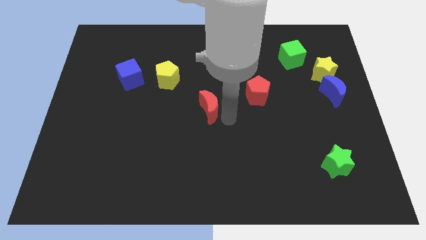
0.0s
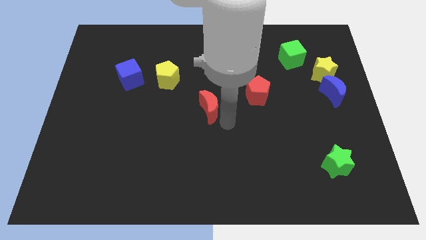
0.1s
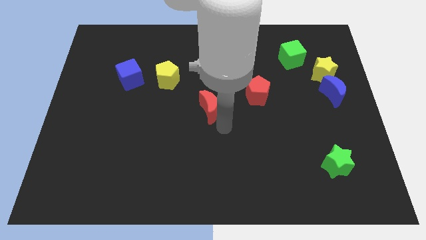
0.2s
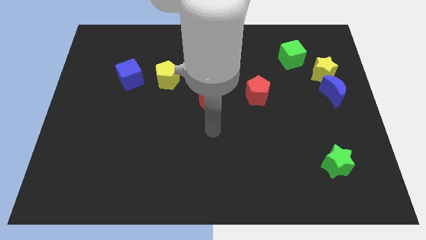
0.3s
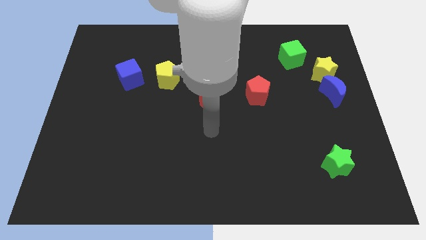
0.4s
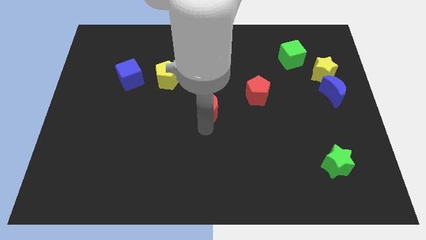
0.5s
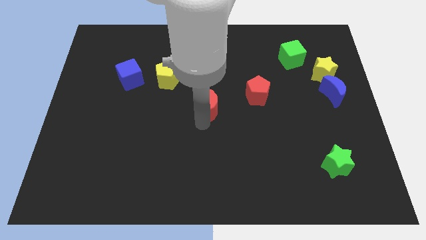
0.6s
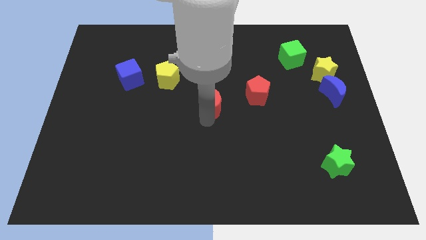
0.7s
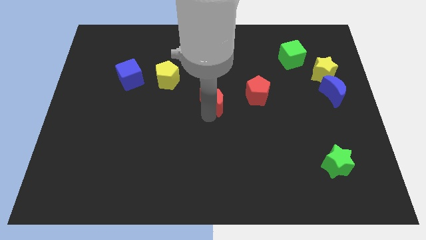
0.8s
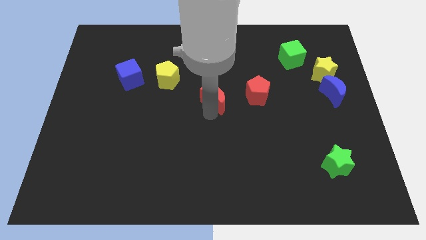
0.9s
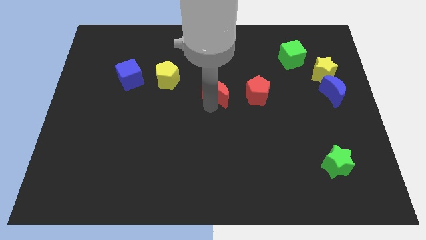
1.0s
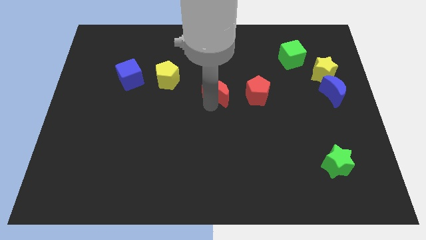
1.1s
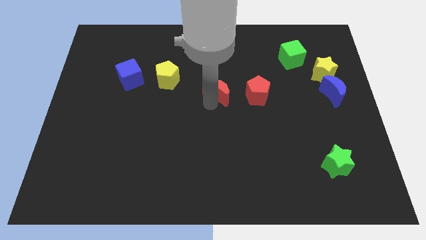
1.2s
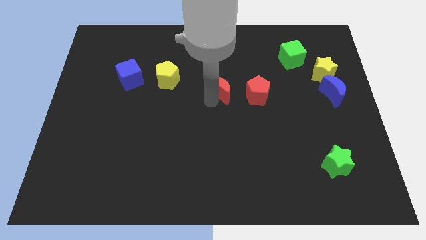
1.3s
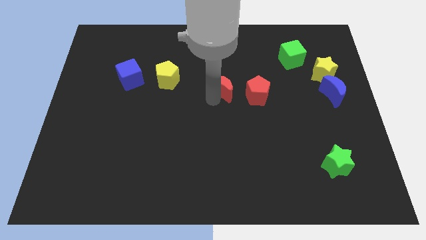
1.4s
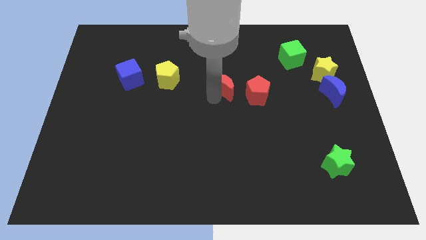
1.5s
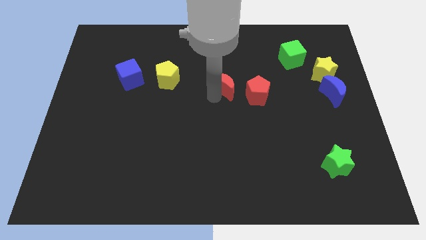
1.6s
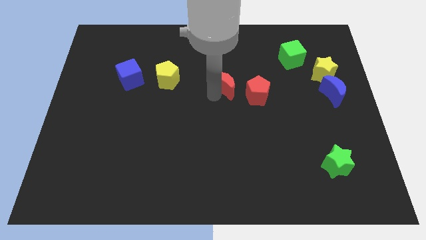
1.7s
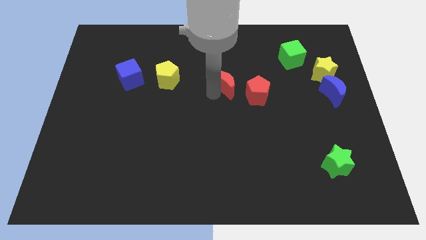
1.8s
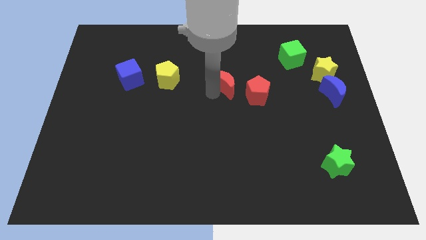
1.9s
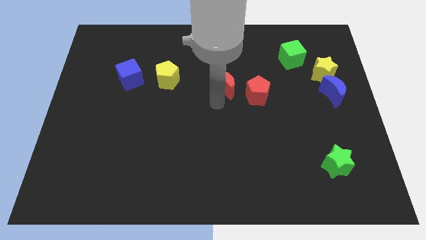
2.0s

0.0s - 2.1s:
push the red moon upwards

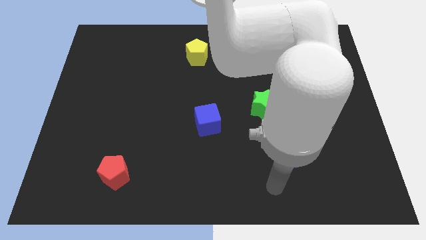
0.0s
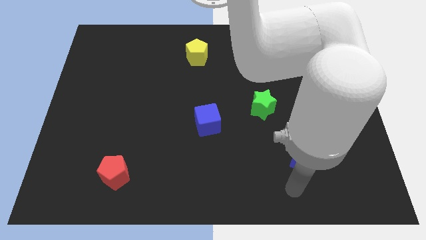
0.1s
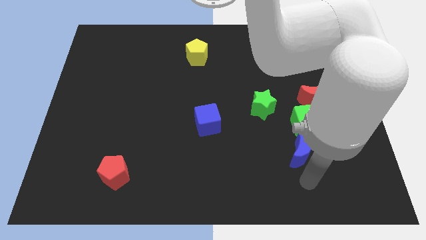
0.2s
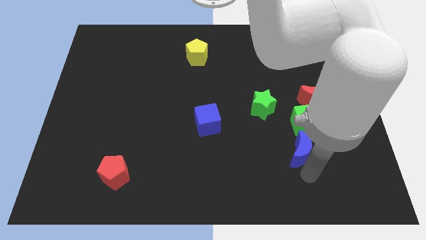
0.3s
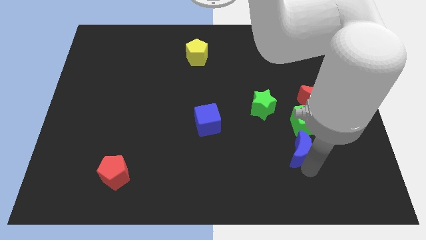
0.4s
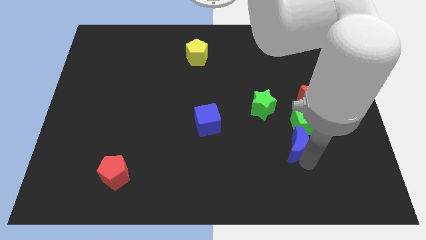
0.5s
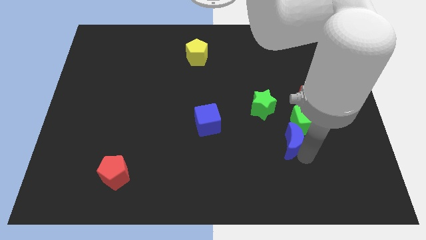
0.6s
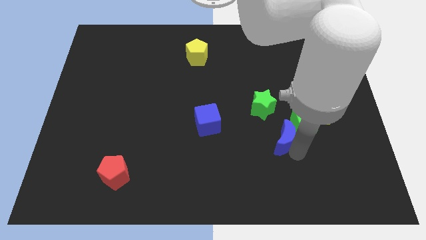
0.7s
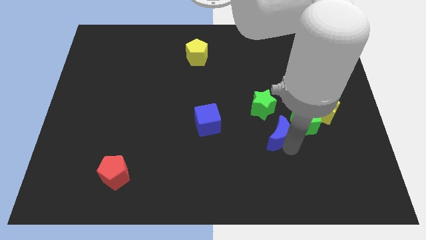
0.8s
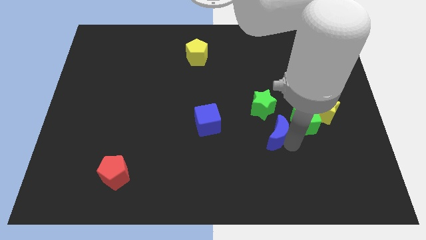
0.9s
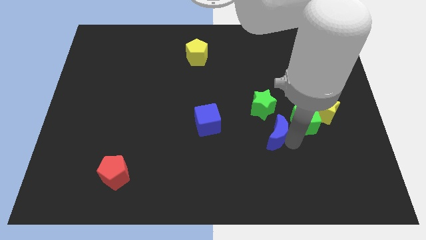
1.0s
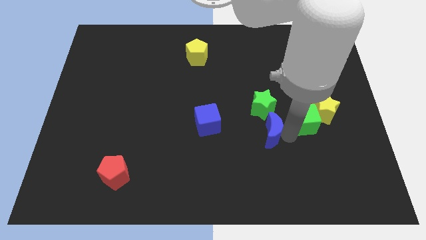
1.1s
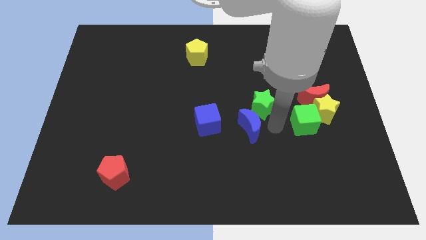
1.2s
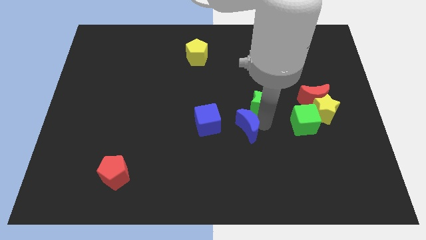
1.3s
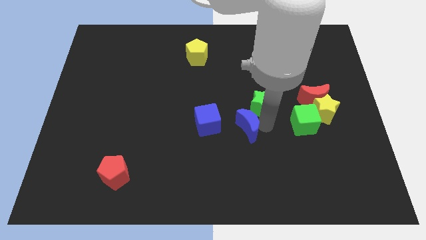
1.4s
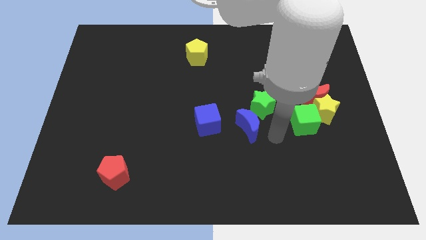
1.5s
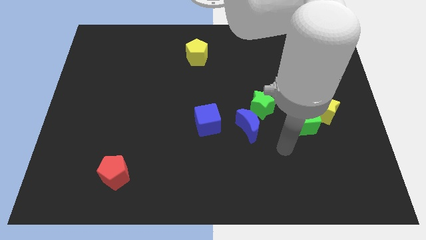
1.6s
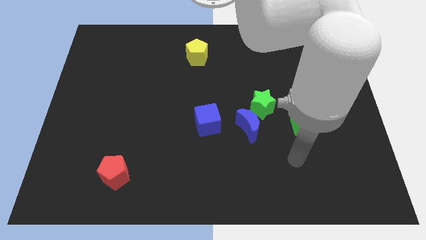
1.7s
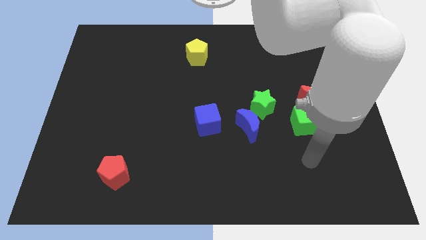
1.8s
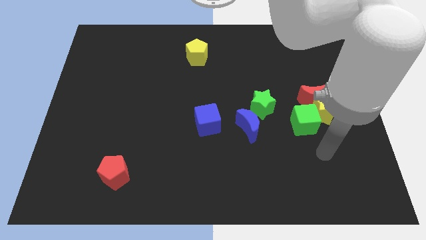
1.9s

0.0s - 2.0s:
separate the blue moon from the green cube

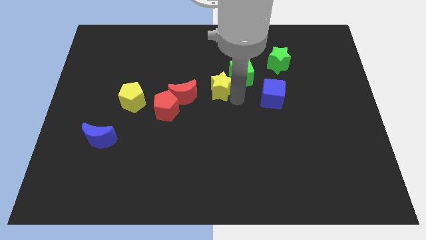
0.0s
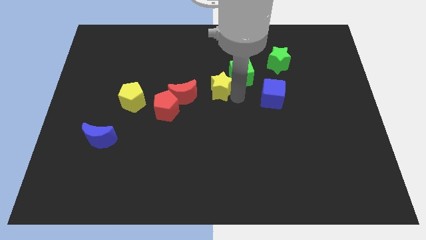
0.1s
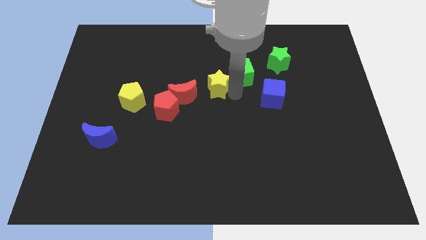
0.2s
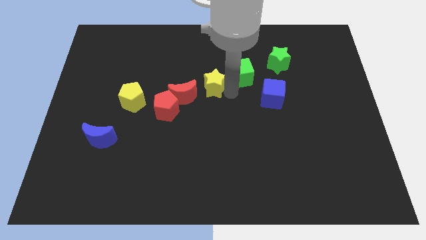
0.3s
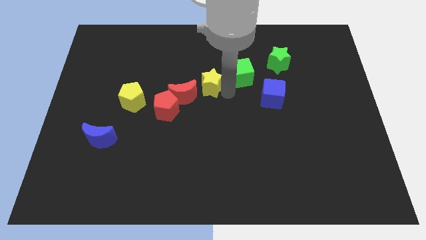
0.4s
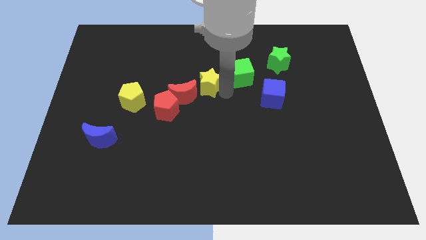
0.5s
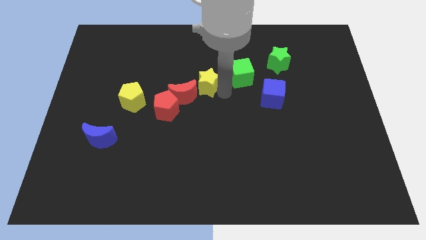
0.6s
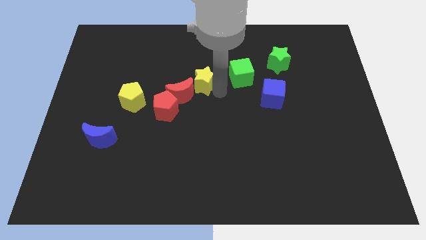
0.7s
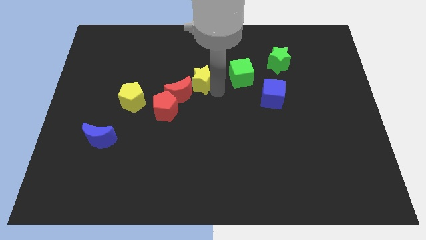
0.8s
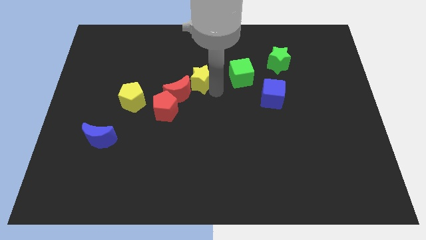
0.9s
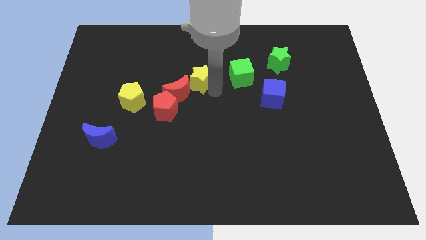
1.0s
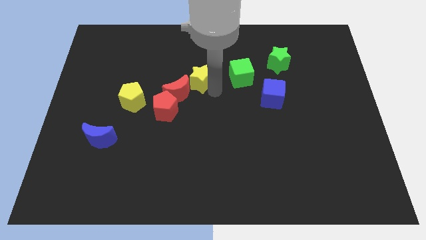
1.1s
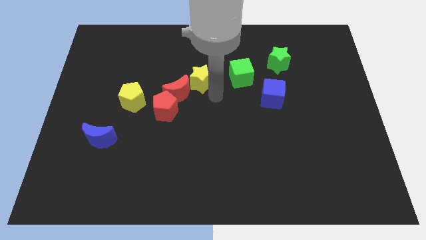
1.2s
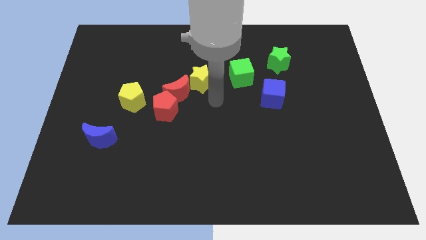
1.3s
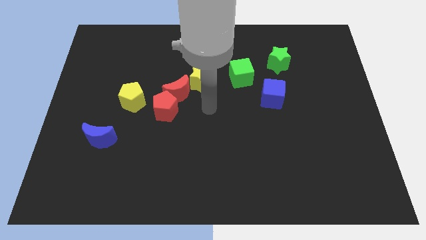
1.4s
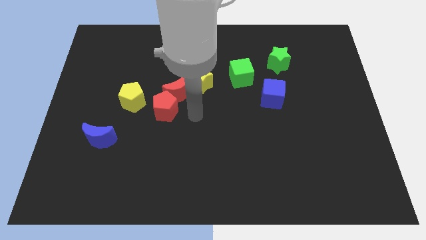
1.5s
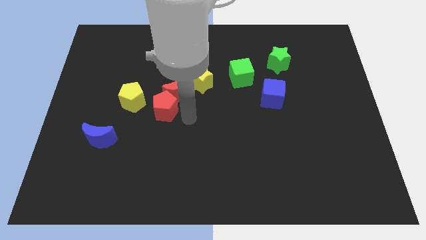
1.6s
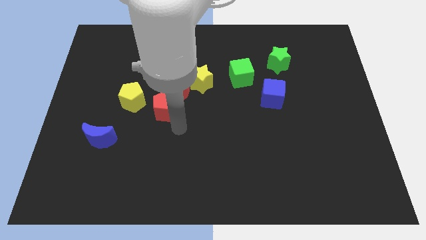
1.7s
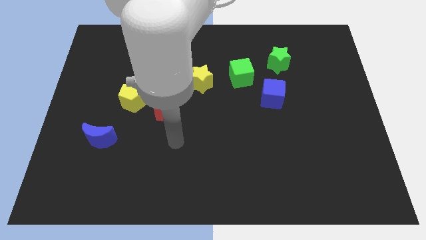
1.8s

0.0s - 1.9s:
touch red crescent with the help of yellow star

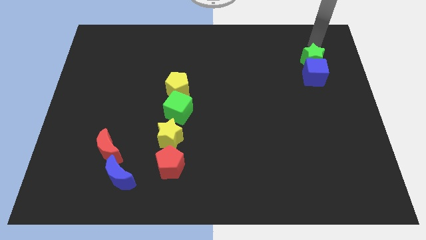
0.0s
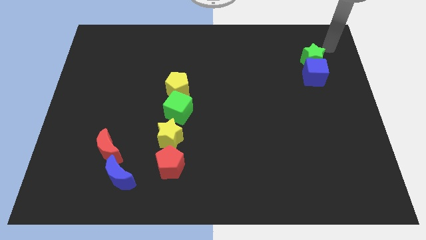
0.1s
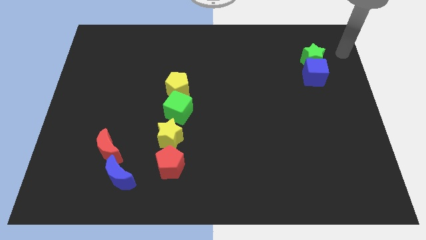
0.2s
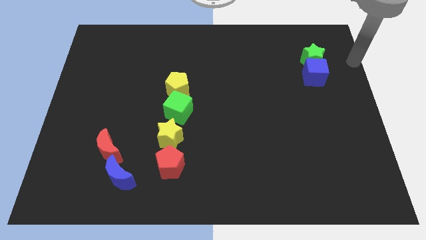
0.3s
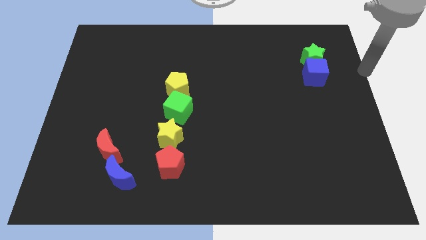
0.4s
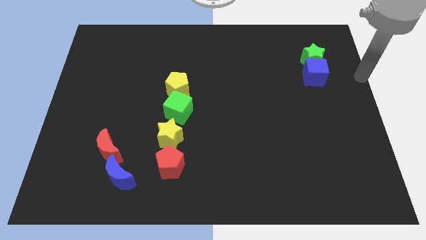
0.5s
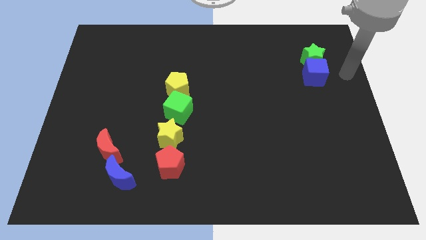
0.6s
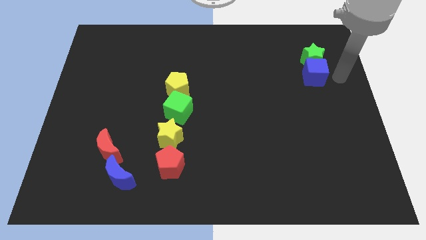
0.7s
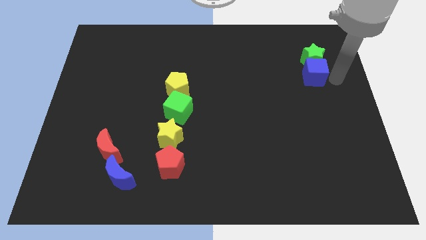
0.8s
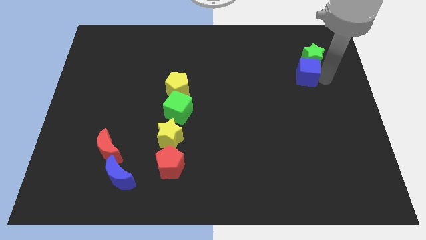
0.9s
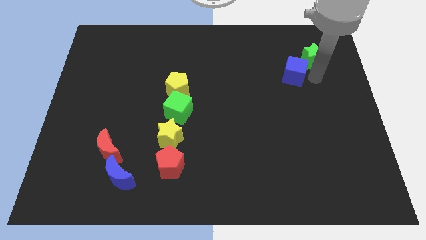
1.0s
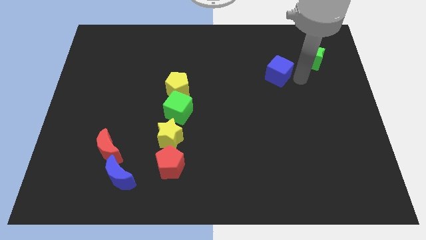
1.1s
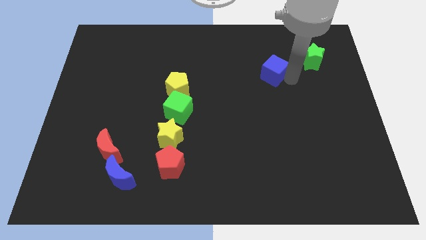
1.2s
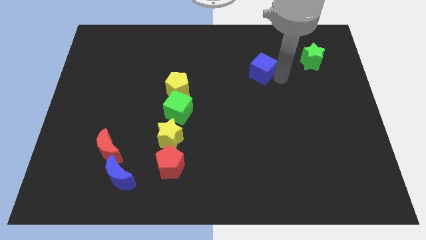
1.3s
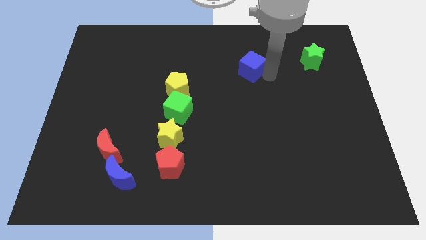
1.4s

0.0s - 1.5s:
separate the blue cube from the green star

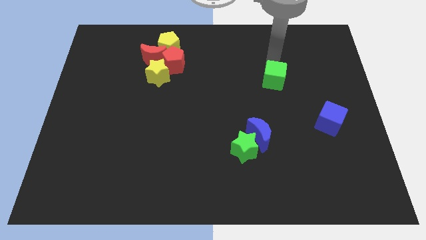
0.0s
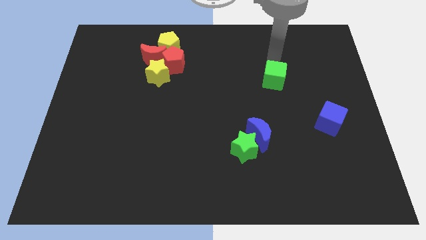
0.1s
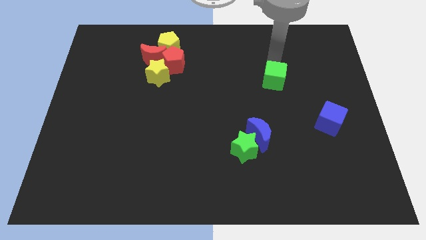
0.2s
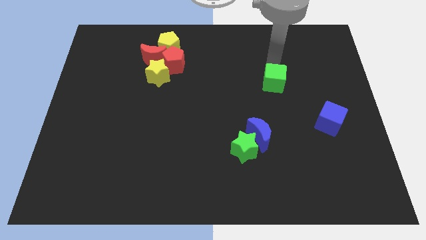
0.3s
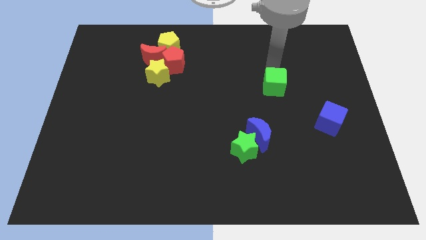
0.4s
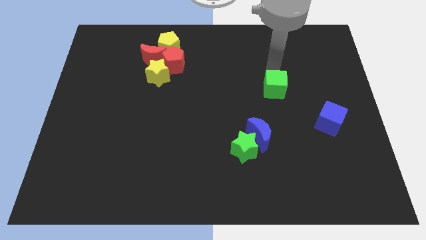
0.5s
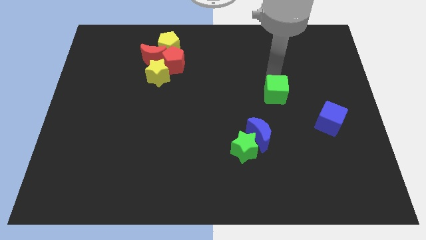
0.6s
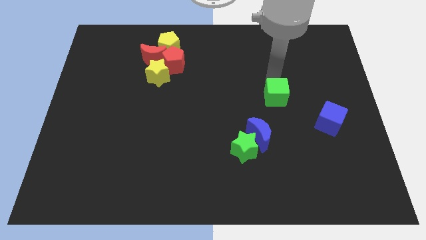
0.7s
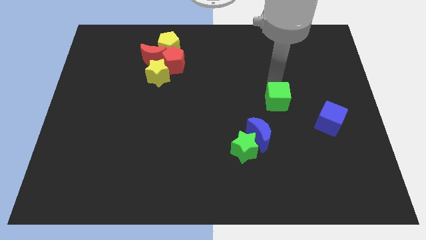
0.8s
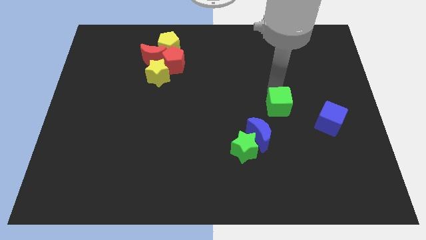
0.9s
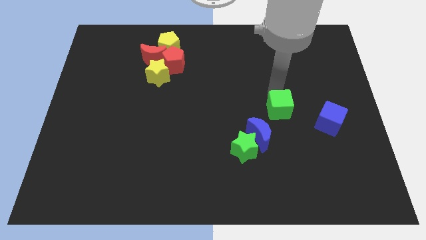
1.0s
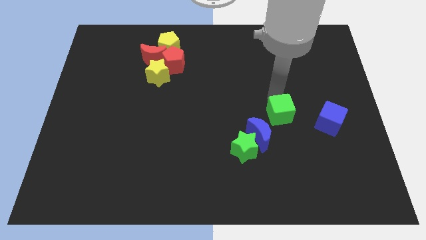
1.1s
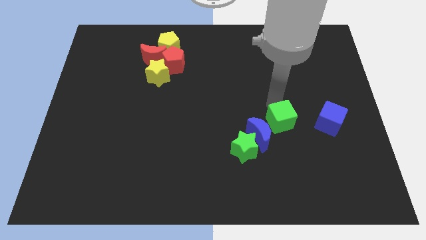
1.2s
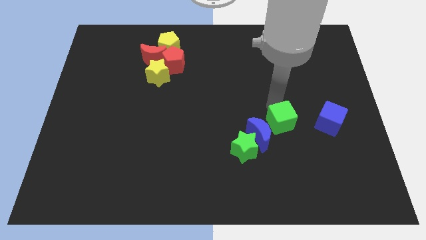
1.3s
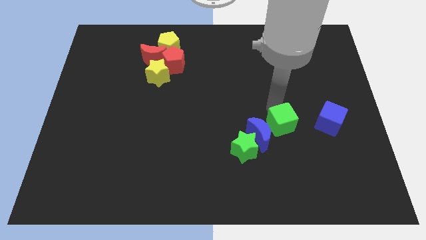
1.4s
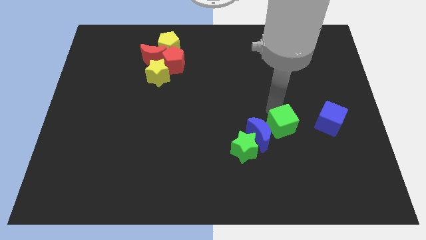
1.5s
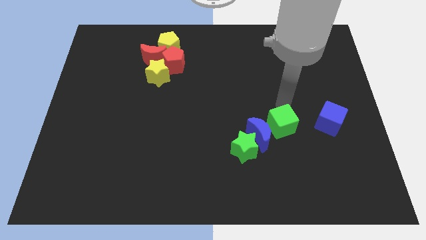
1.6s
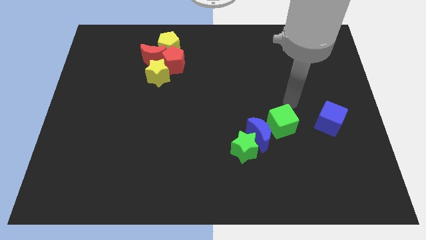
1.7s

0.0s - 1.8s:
place the green cube to the right side of blue moon
